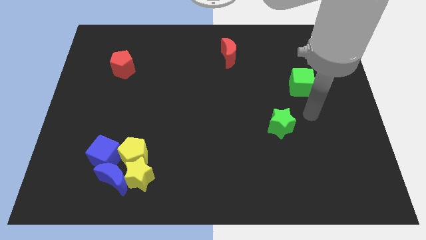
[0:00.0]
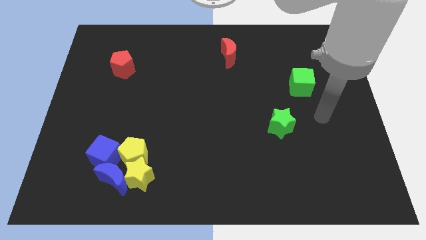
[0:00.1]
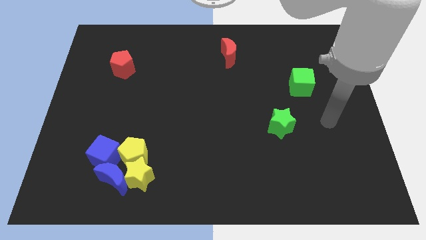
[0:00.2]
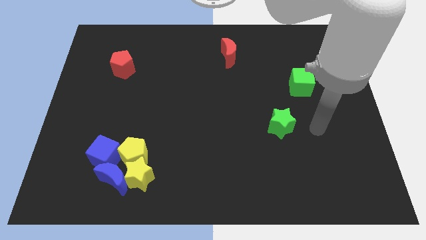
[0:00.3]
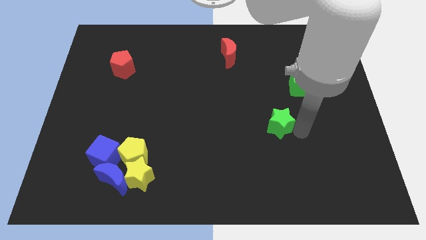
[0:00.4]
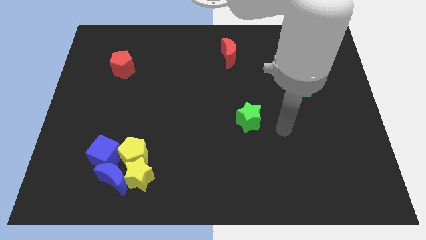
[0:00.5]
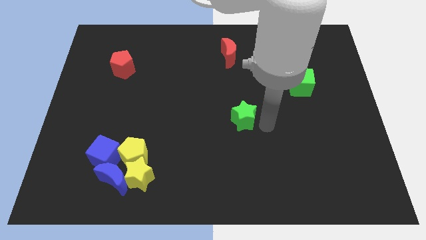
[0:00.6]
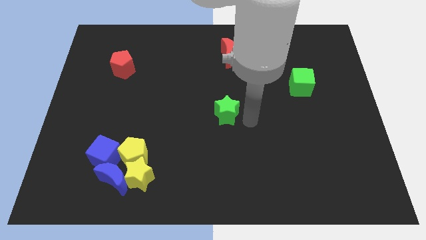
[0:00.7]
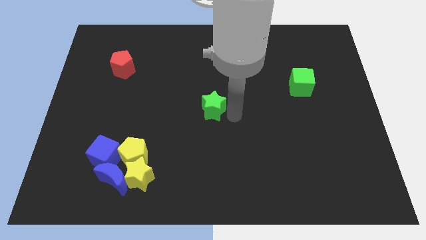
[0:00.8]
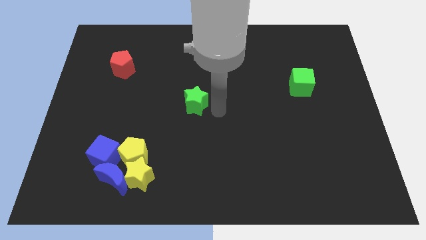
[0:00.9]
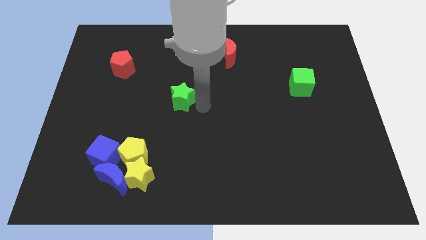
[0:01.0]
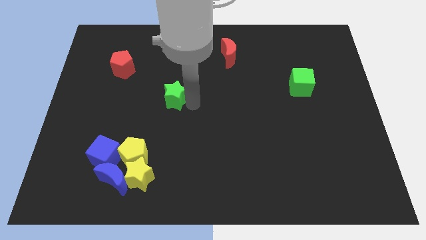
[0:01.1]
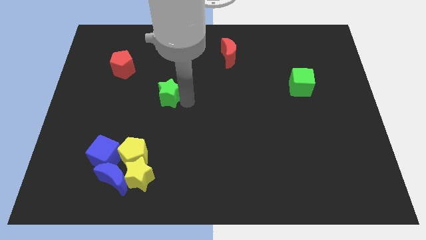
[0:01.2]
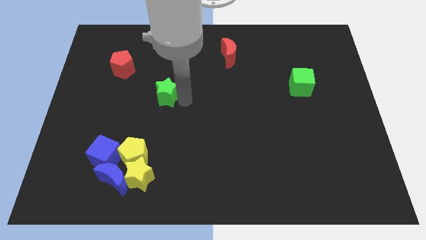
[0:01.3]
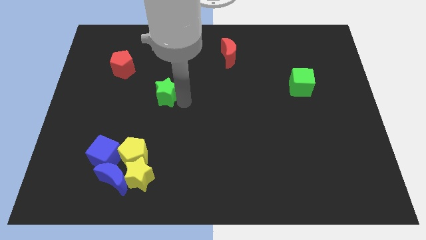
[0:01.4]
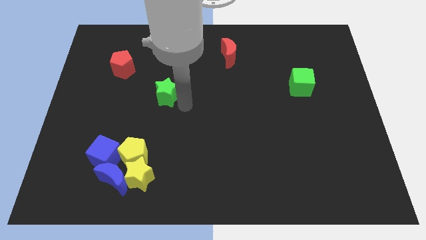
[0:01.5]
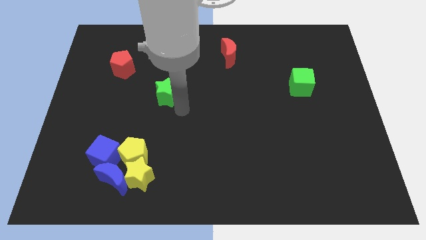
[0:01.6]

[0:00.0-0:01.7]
push the green star towards the left side of the board

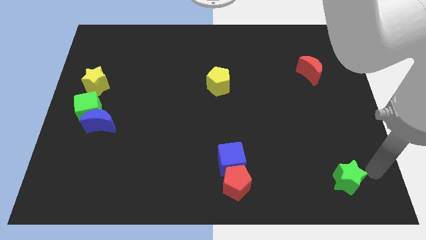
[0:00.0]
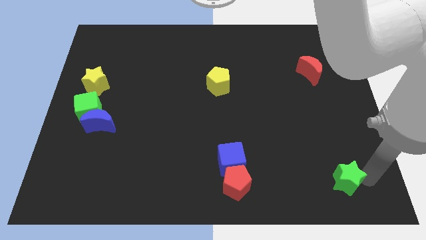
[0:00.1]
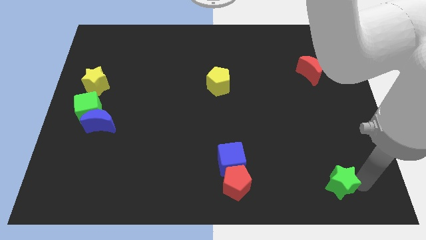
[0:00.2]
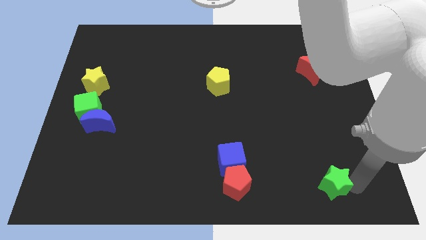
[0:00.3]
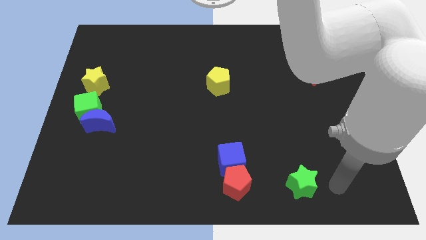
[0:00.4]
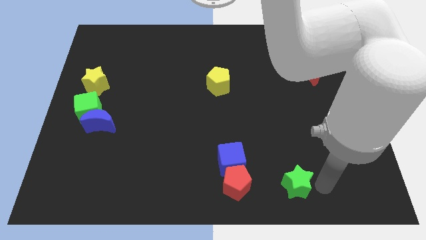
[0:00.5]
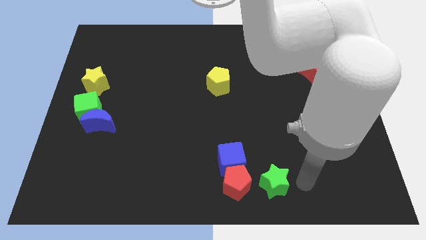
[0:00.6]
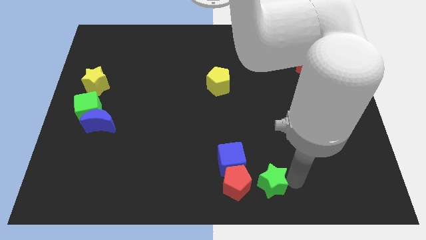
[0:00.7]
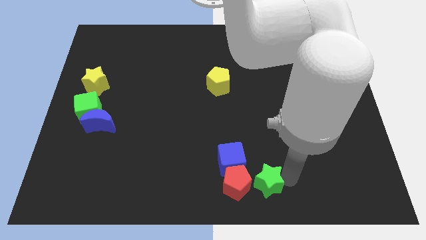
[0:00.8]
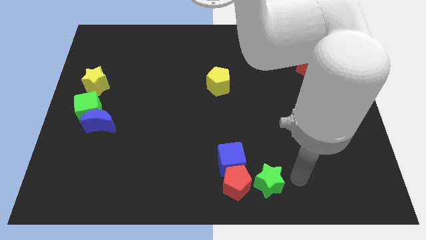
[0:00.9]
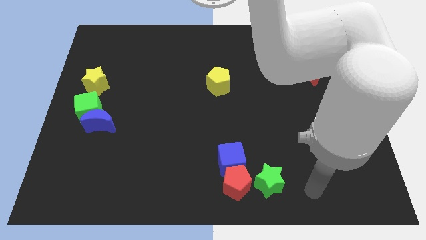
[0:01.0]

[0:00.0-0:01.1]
move the green star close to the red pentagon

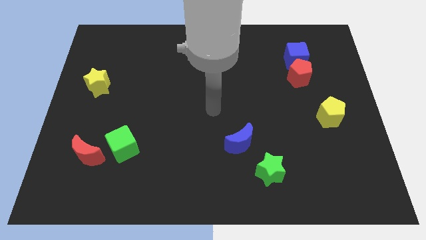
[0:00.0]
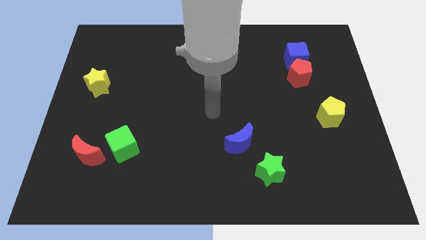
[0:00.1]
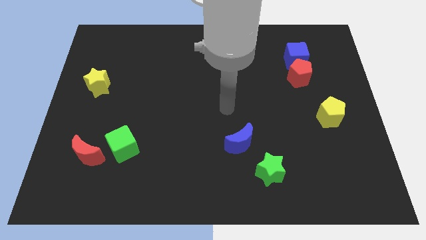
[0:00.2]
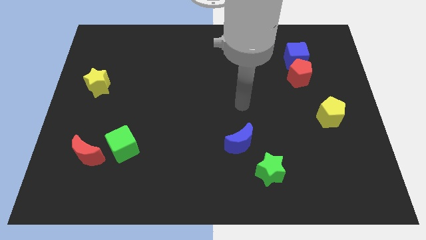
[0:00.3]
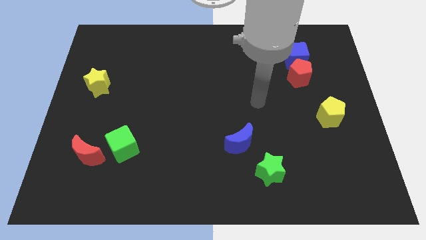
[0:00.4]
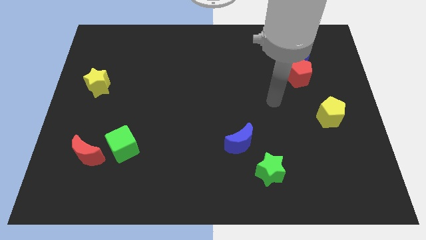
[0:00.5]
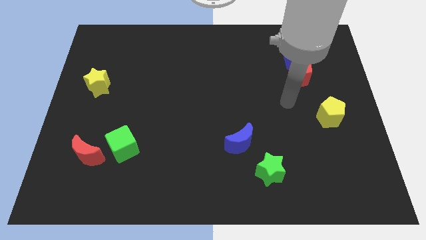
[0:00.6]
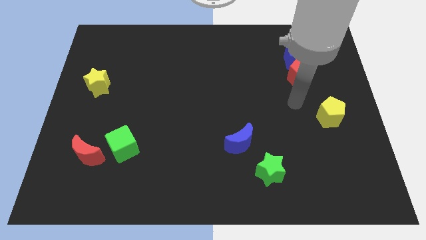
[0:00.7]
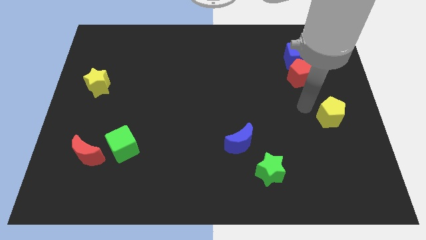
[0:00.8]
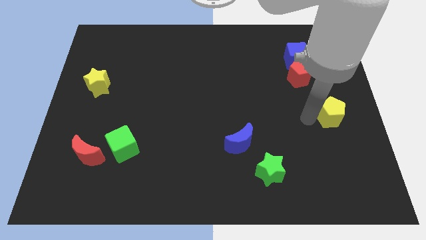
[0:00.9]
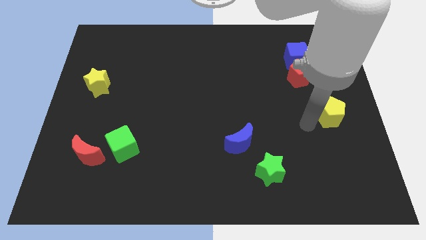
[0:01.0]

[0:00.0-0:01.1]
move arm near yellow pentagon

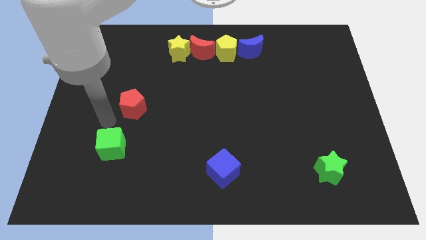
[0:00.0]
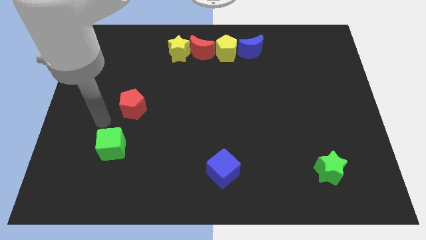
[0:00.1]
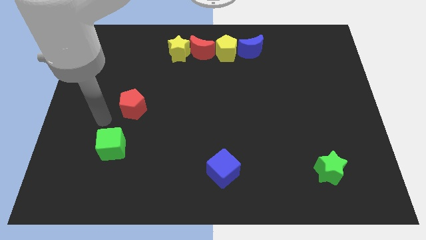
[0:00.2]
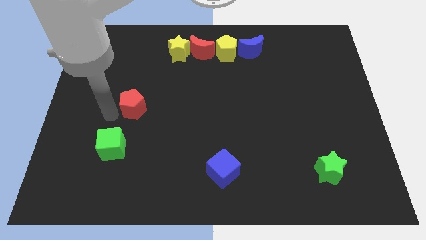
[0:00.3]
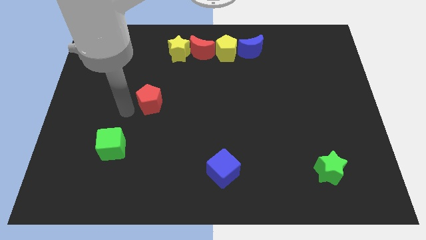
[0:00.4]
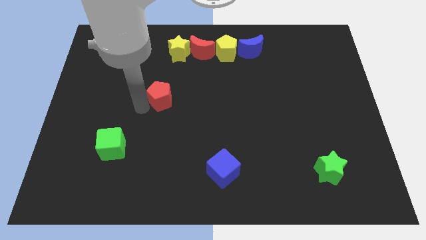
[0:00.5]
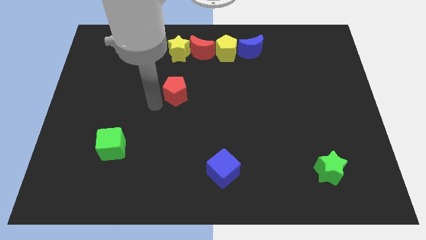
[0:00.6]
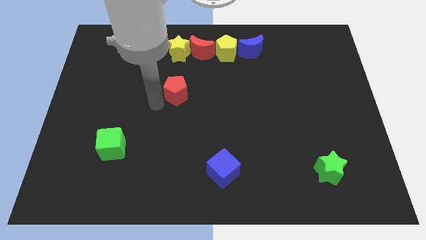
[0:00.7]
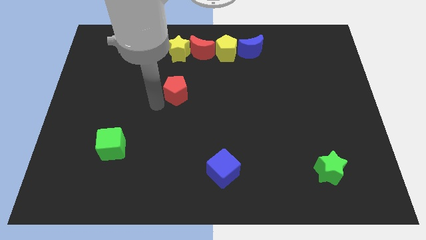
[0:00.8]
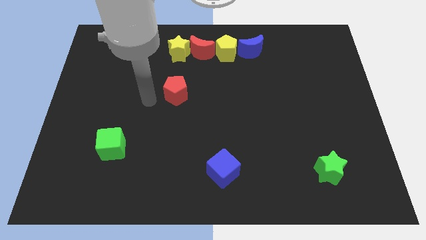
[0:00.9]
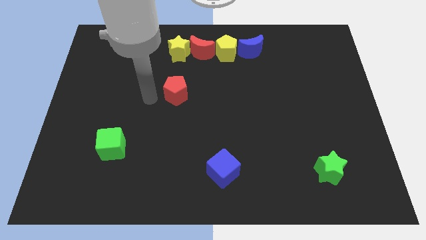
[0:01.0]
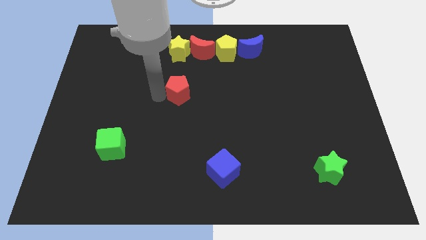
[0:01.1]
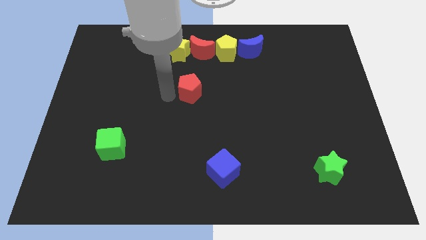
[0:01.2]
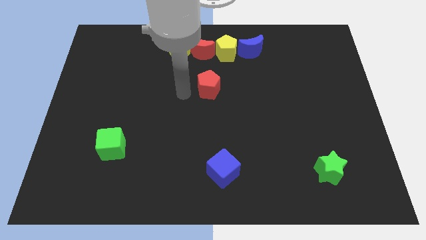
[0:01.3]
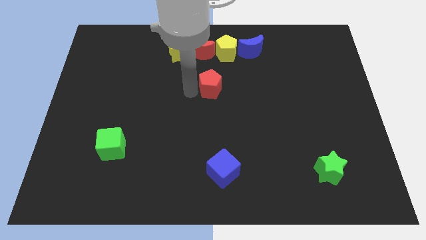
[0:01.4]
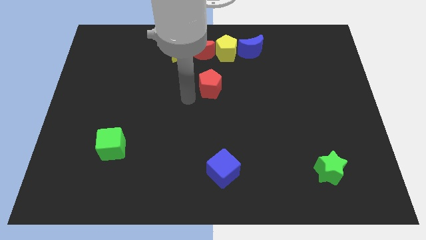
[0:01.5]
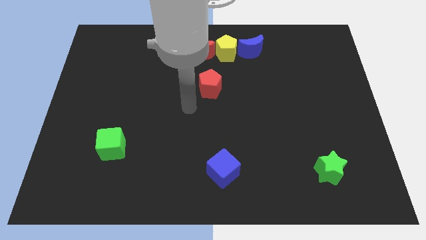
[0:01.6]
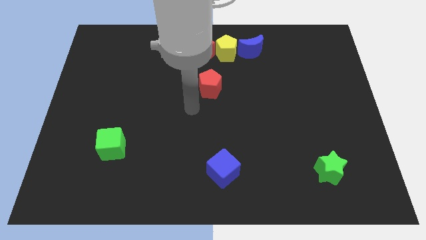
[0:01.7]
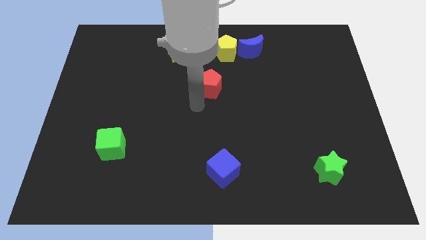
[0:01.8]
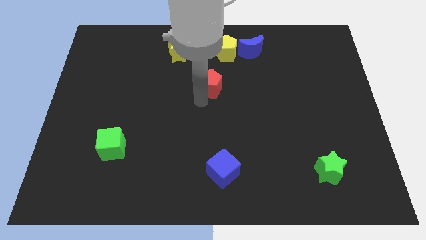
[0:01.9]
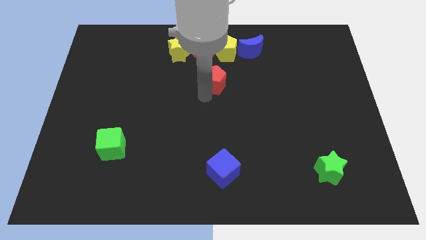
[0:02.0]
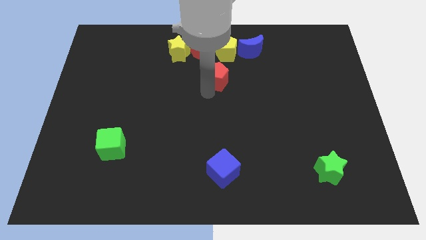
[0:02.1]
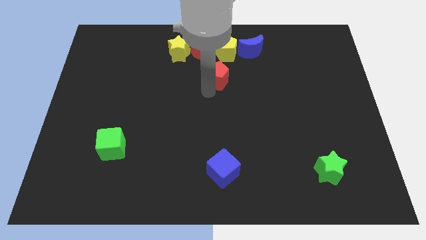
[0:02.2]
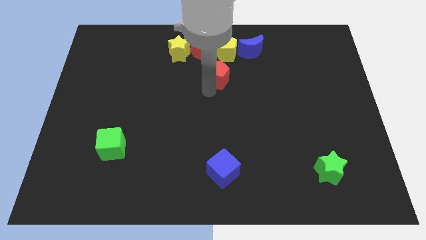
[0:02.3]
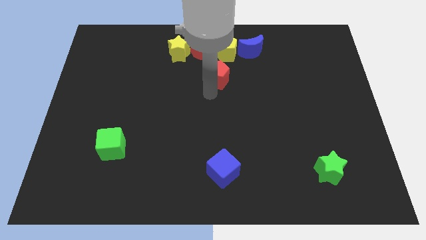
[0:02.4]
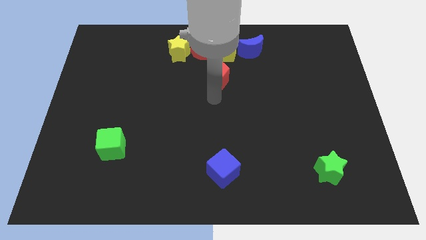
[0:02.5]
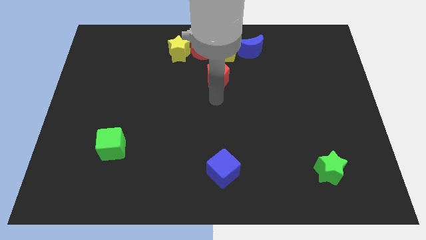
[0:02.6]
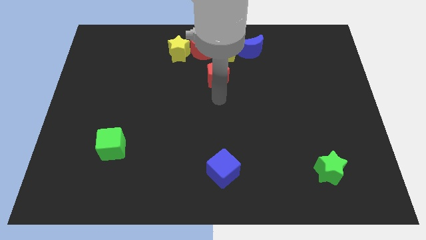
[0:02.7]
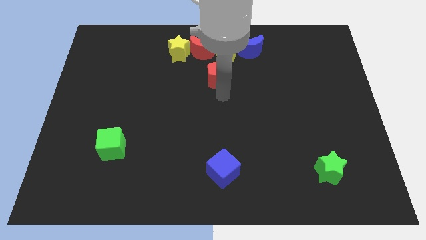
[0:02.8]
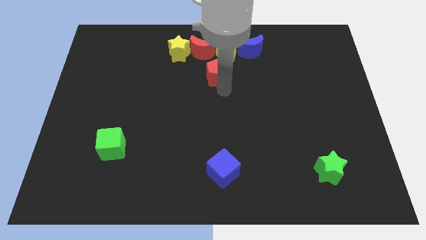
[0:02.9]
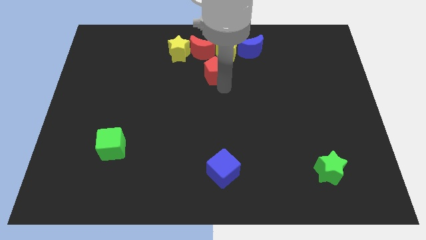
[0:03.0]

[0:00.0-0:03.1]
move red pentagon towards yellow pentagon

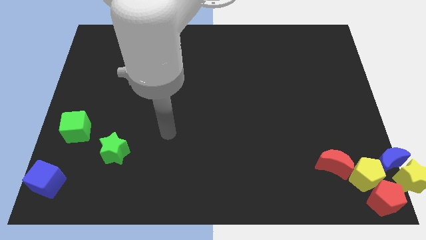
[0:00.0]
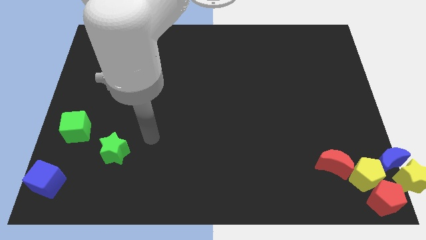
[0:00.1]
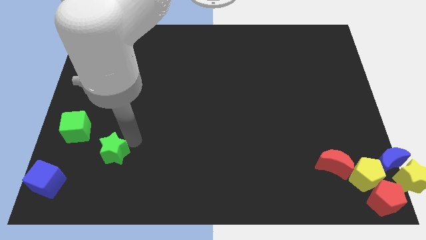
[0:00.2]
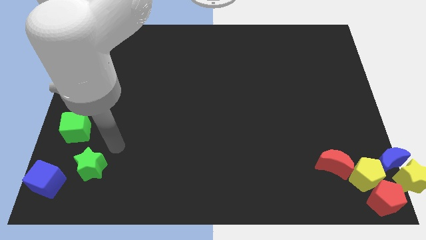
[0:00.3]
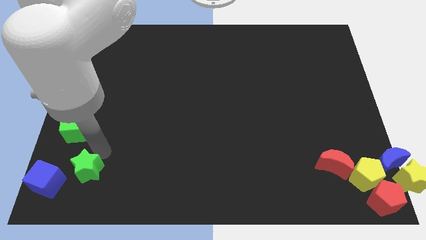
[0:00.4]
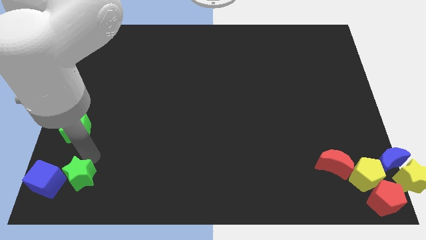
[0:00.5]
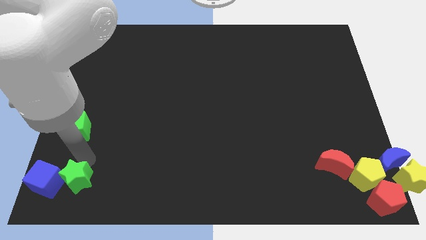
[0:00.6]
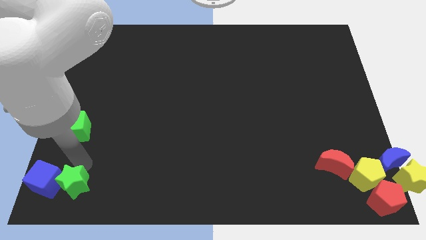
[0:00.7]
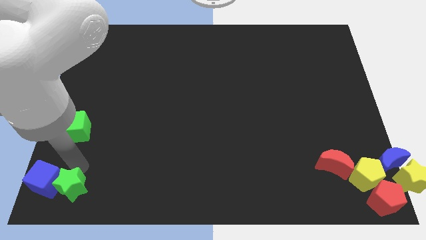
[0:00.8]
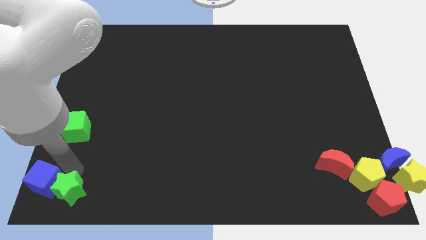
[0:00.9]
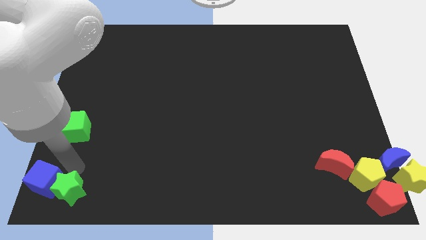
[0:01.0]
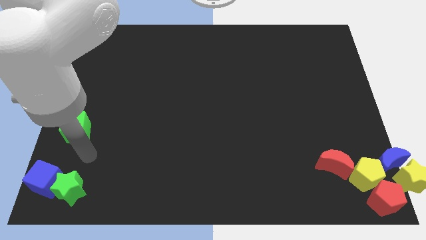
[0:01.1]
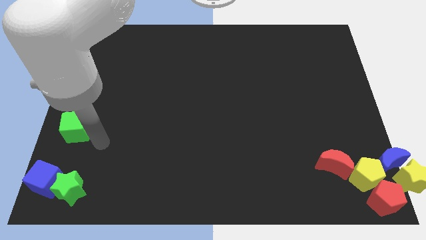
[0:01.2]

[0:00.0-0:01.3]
push the green star to the right of the blue cube

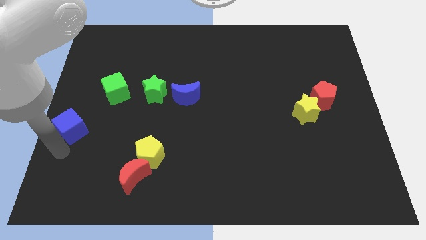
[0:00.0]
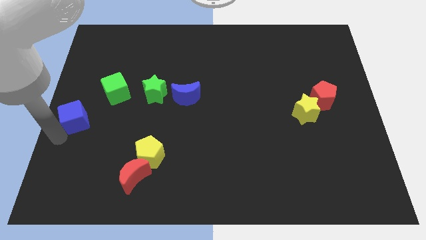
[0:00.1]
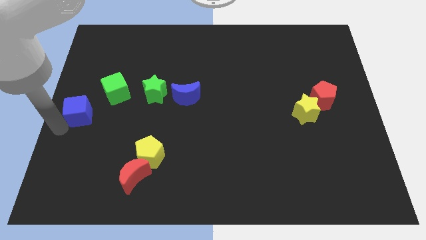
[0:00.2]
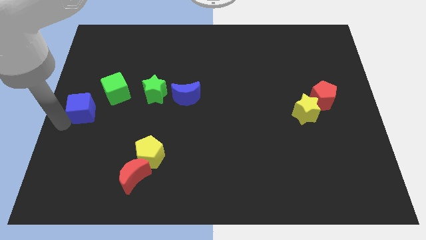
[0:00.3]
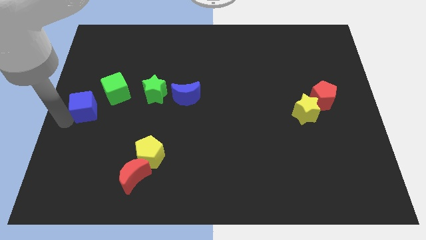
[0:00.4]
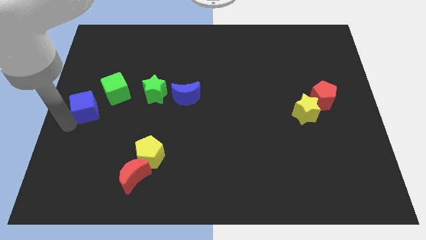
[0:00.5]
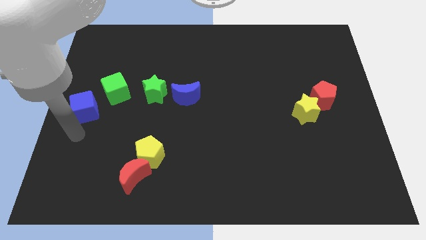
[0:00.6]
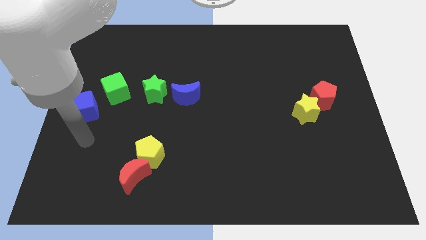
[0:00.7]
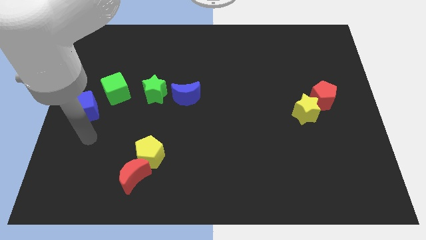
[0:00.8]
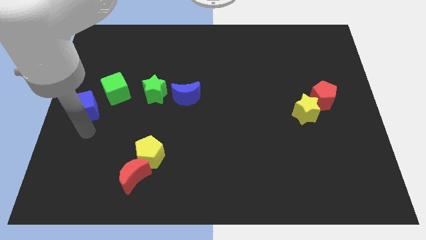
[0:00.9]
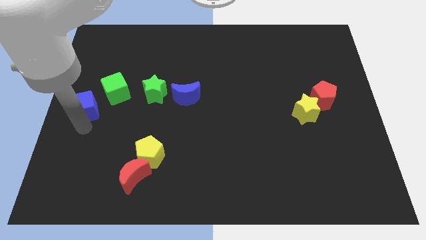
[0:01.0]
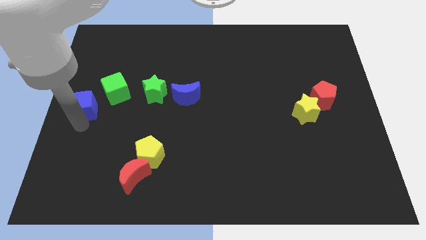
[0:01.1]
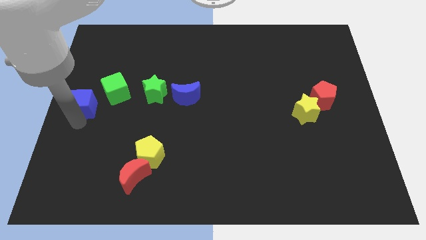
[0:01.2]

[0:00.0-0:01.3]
move the blue cube upwards
